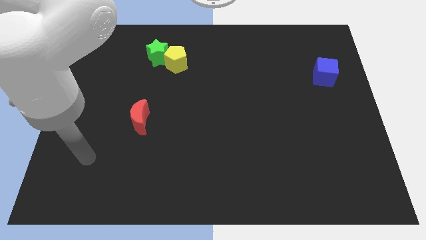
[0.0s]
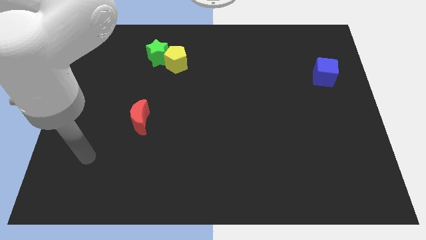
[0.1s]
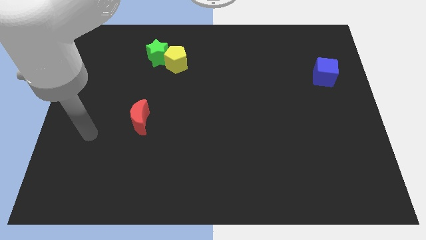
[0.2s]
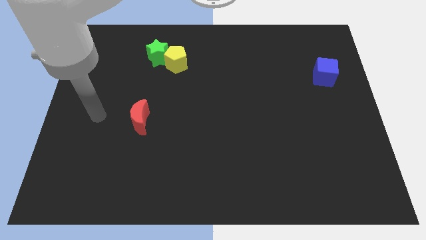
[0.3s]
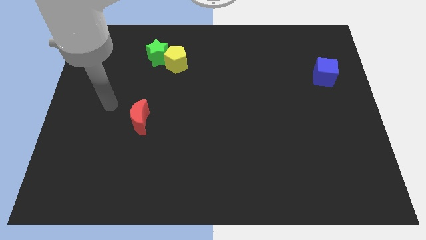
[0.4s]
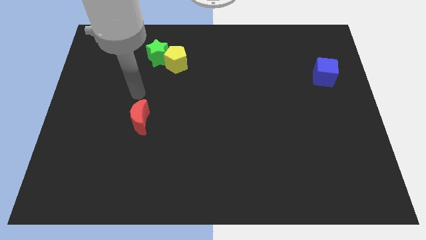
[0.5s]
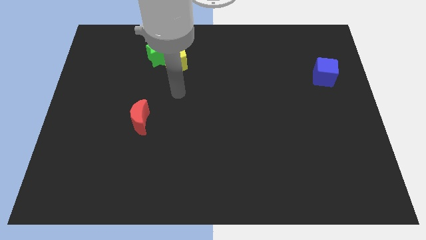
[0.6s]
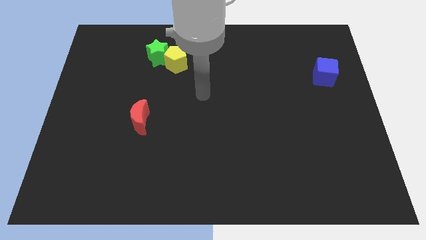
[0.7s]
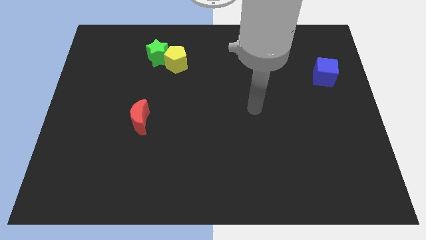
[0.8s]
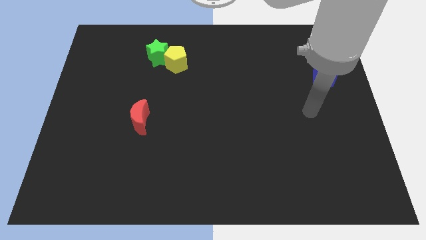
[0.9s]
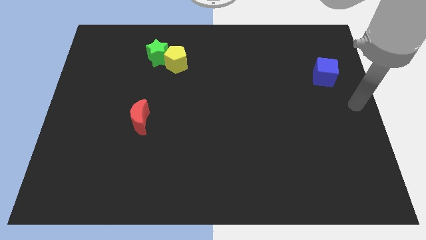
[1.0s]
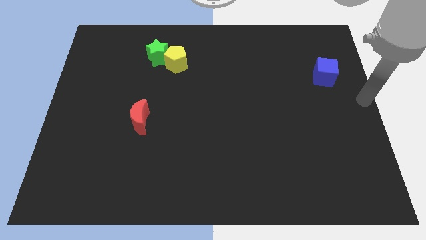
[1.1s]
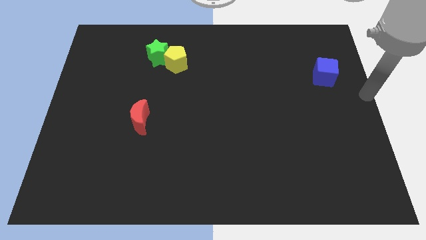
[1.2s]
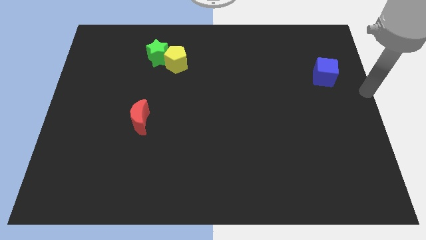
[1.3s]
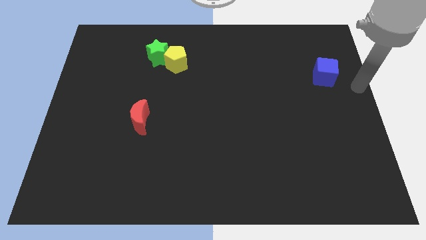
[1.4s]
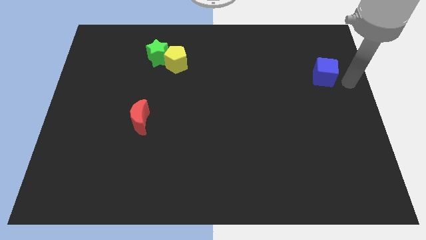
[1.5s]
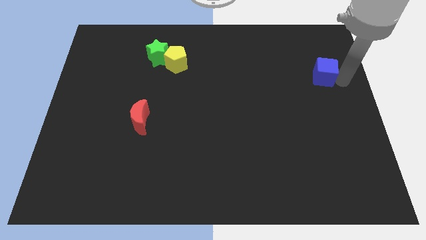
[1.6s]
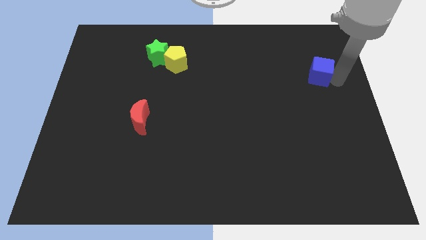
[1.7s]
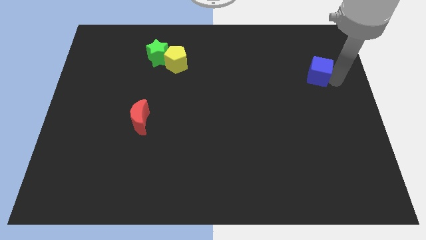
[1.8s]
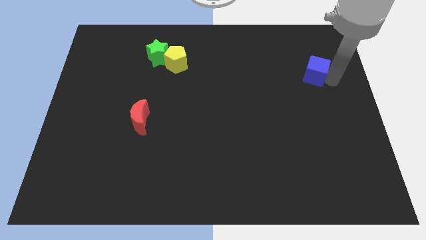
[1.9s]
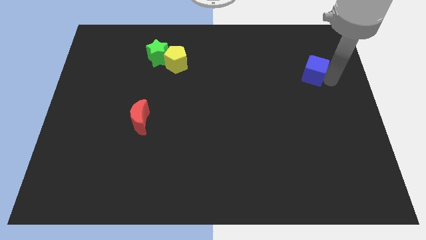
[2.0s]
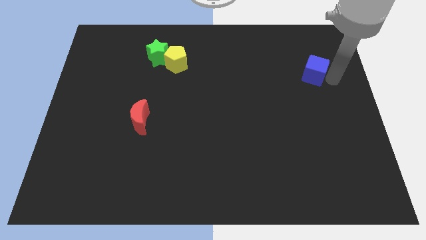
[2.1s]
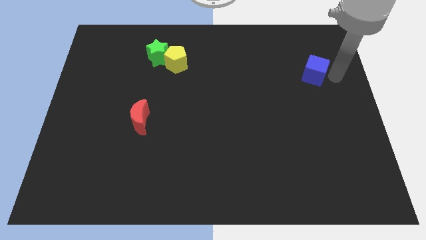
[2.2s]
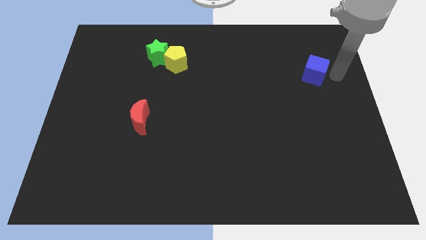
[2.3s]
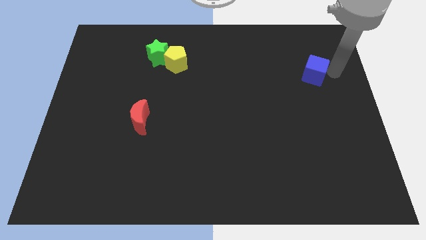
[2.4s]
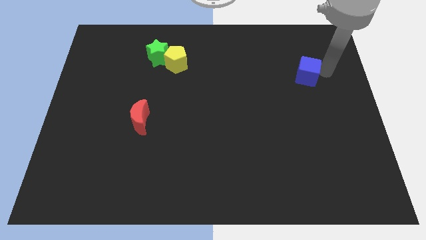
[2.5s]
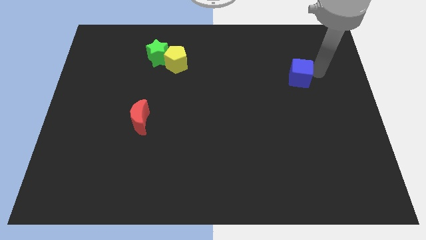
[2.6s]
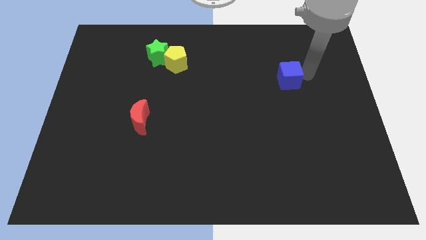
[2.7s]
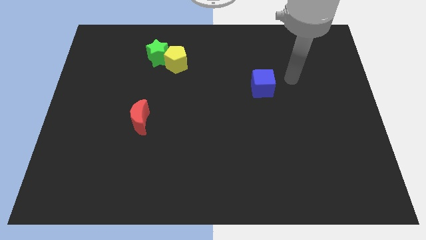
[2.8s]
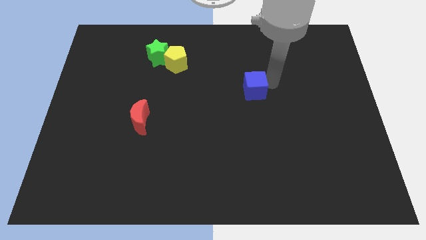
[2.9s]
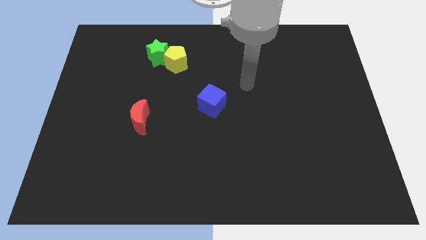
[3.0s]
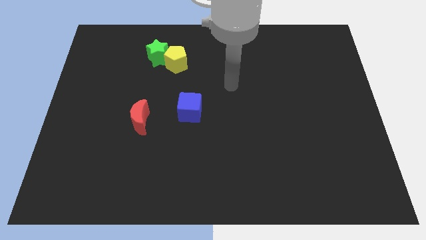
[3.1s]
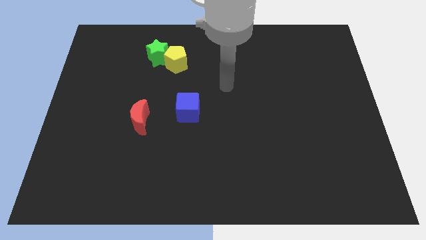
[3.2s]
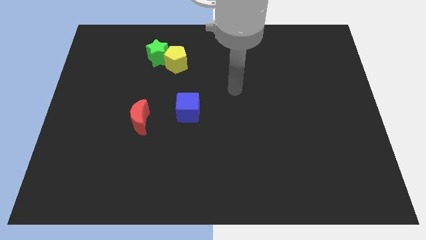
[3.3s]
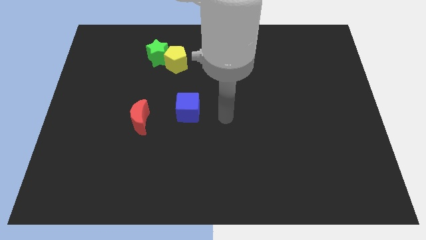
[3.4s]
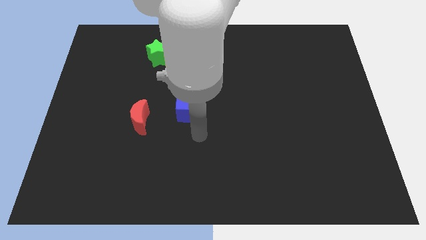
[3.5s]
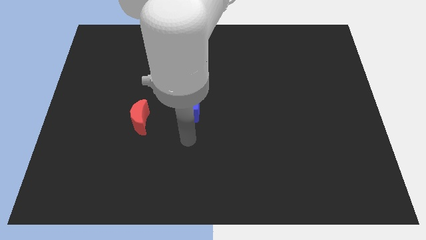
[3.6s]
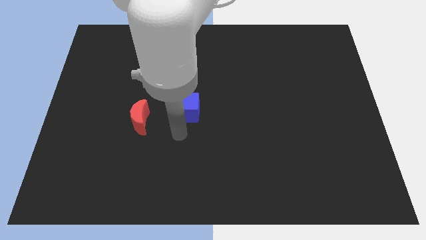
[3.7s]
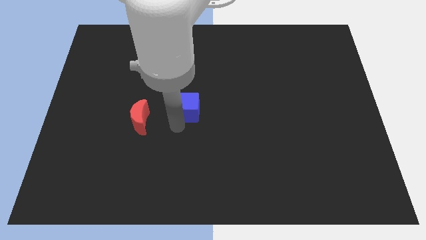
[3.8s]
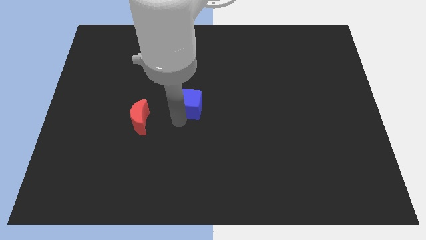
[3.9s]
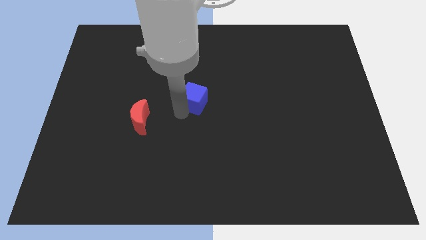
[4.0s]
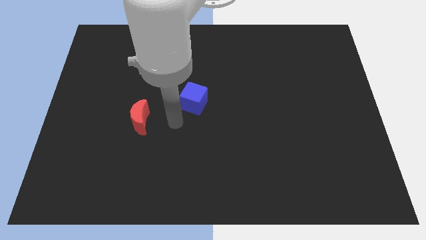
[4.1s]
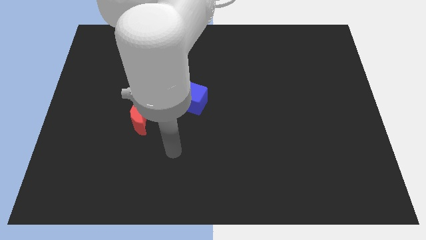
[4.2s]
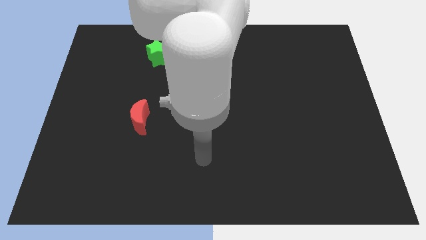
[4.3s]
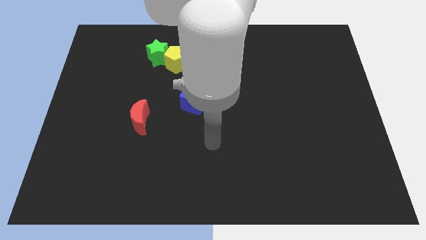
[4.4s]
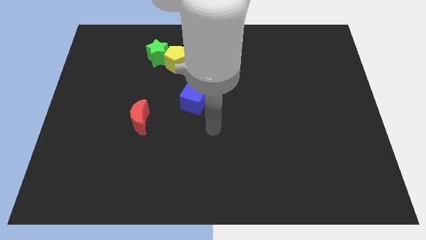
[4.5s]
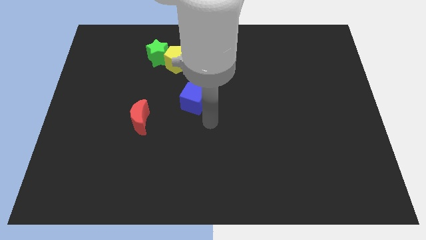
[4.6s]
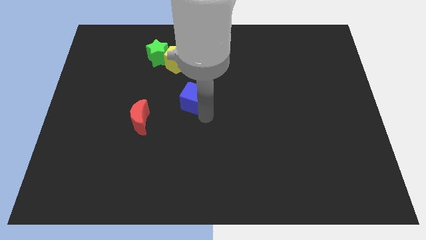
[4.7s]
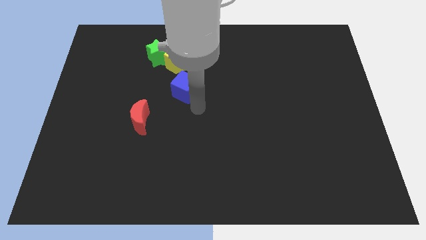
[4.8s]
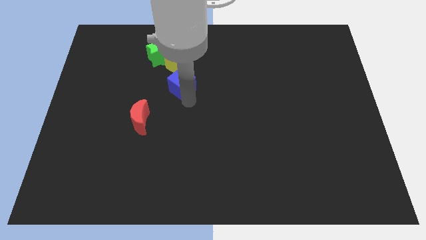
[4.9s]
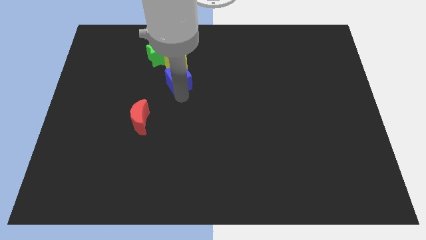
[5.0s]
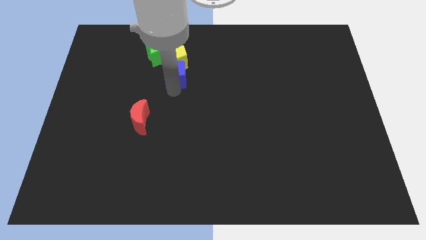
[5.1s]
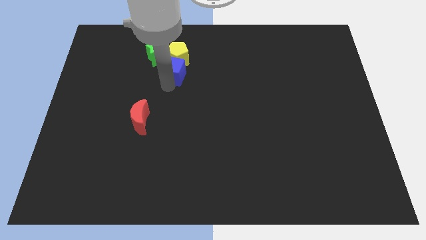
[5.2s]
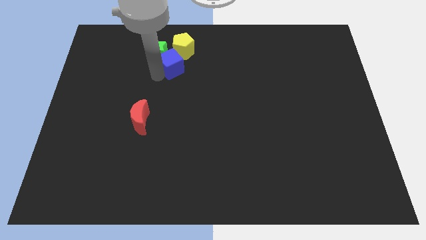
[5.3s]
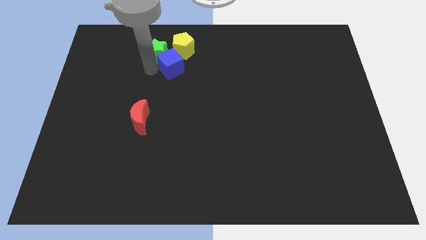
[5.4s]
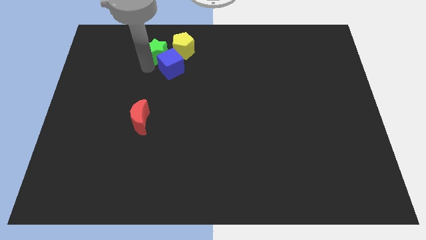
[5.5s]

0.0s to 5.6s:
move the cube towards the green block

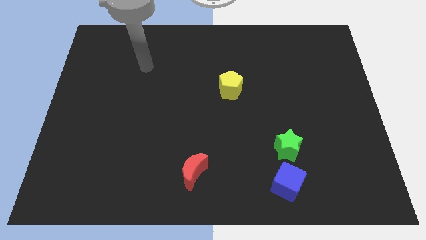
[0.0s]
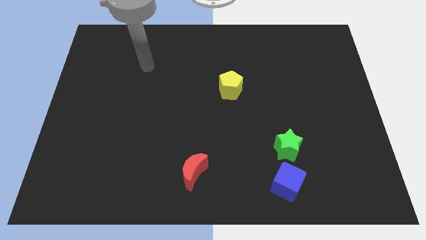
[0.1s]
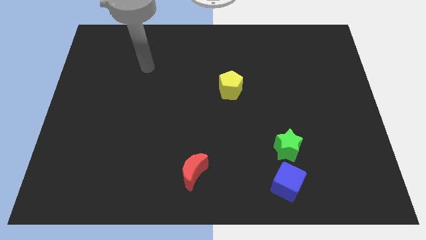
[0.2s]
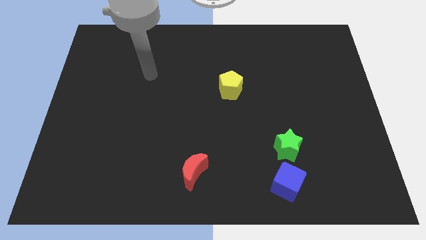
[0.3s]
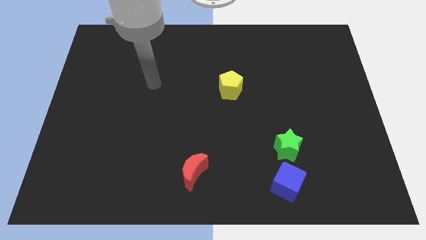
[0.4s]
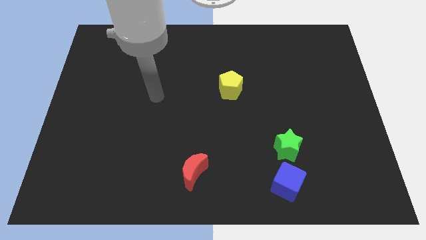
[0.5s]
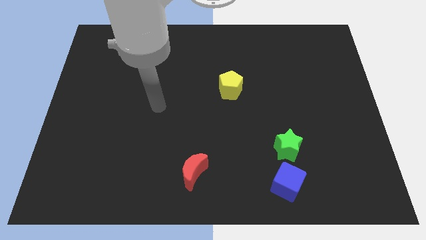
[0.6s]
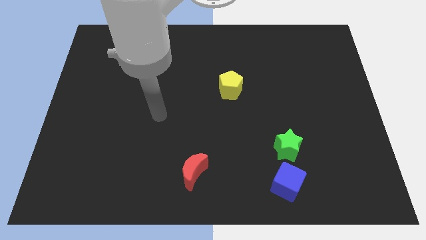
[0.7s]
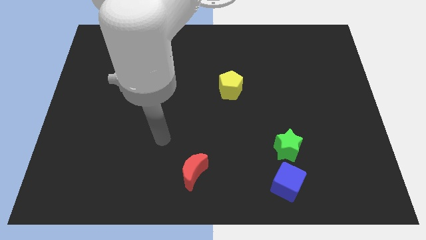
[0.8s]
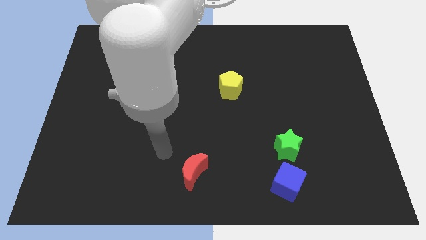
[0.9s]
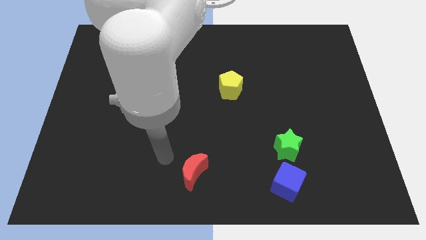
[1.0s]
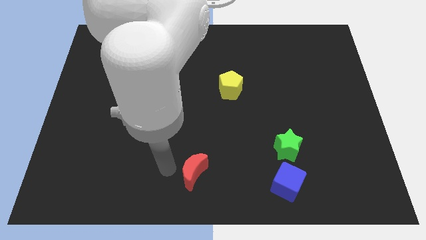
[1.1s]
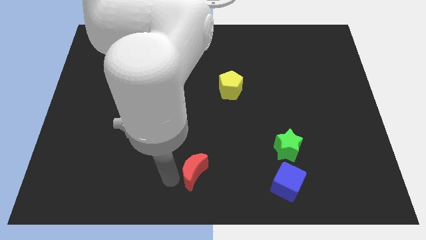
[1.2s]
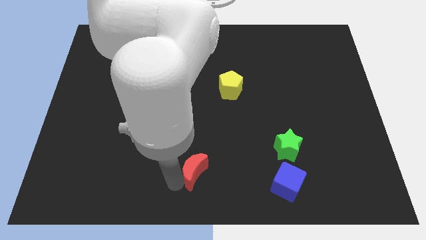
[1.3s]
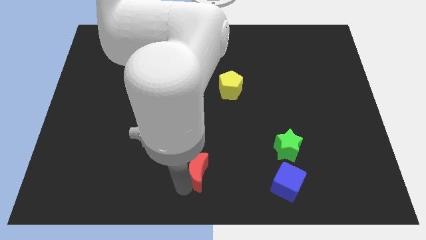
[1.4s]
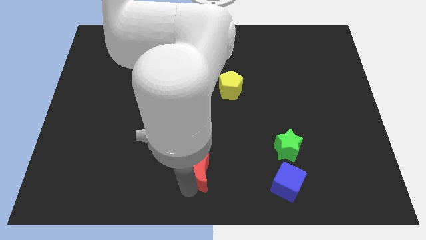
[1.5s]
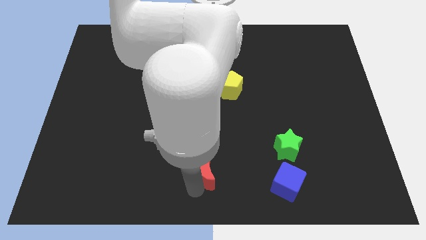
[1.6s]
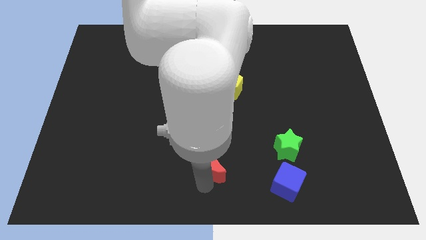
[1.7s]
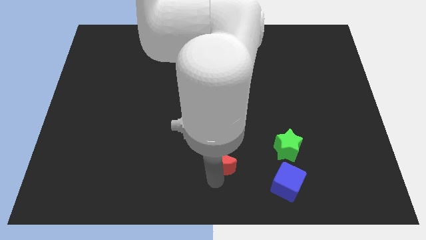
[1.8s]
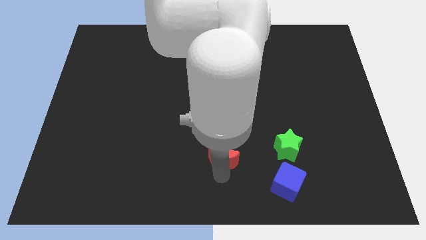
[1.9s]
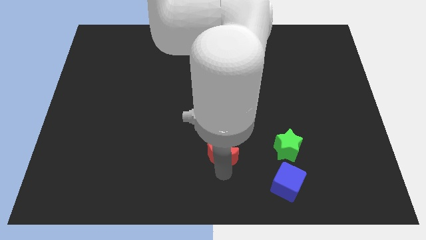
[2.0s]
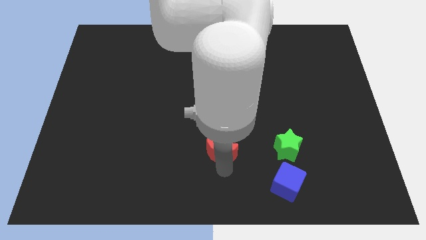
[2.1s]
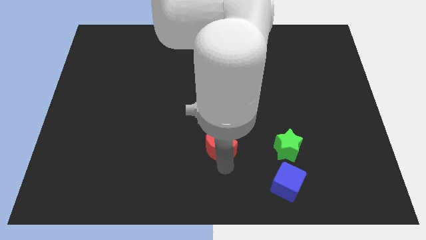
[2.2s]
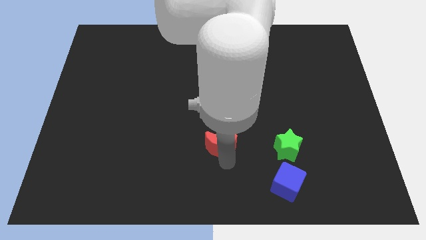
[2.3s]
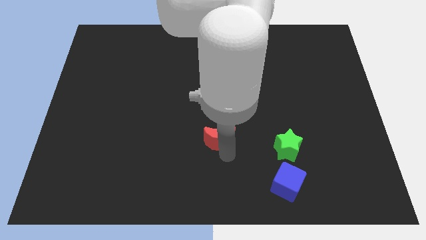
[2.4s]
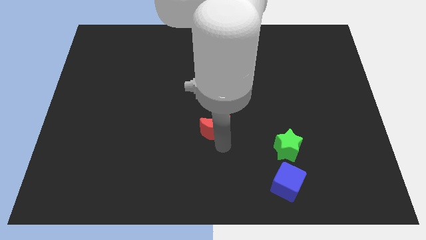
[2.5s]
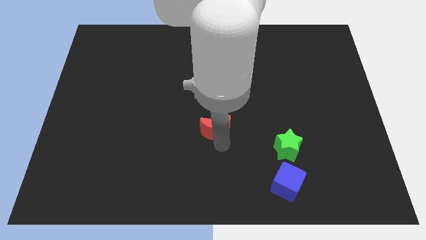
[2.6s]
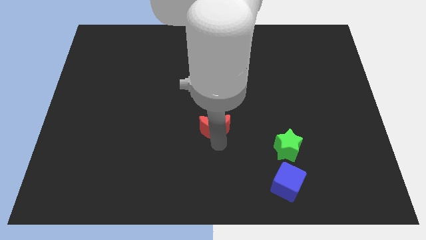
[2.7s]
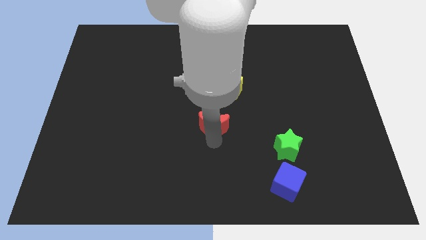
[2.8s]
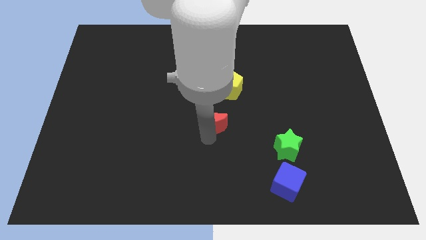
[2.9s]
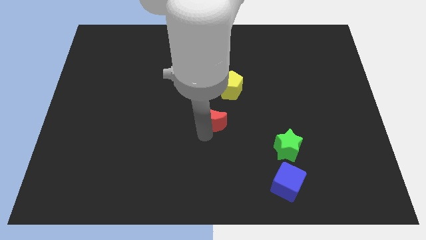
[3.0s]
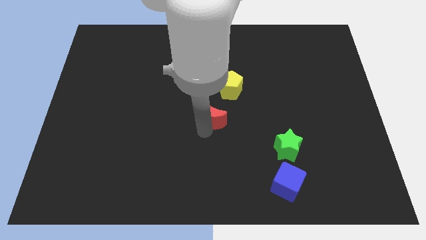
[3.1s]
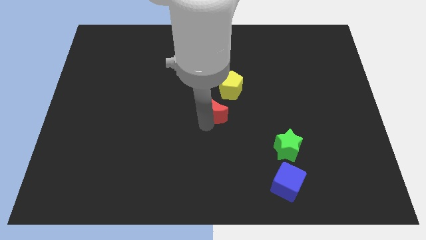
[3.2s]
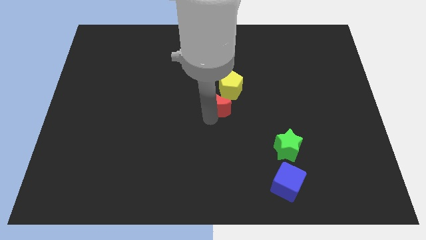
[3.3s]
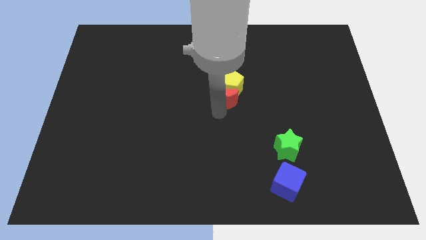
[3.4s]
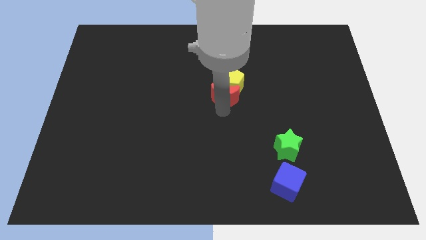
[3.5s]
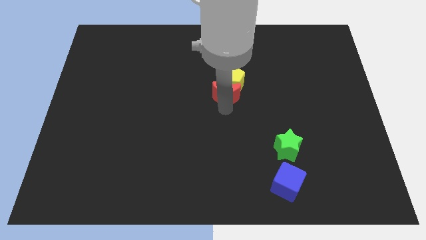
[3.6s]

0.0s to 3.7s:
put the red block next to the yellow pentagon
